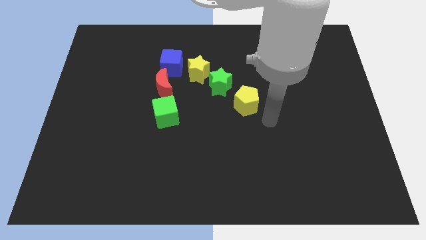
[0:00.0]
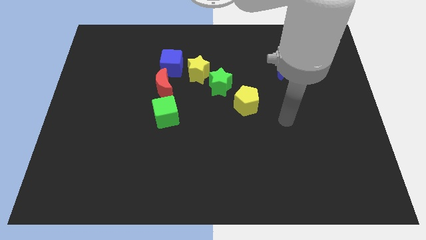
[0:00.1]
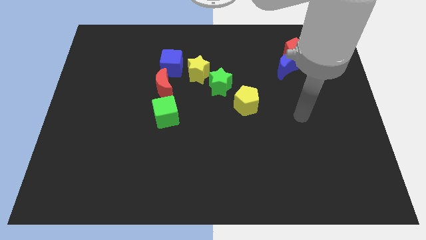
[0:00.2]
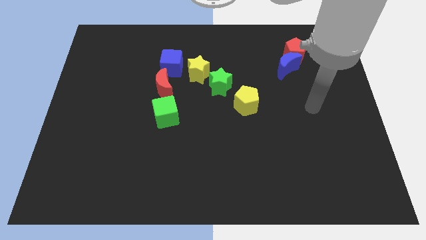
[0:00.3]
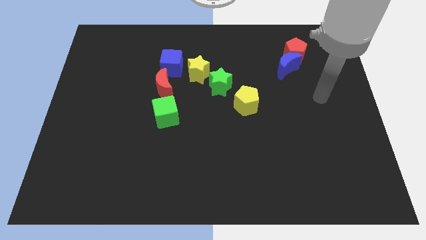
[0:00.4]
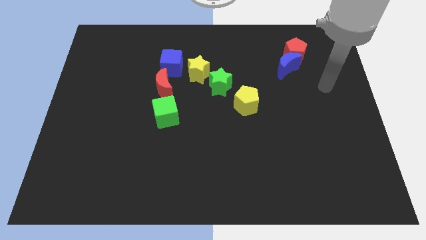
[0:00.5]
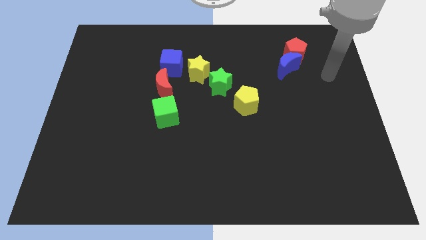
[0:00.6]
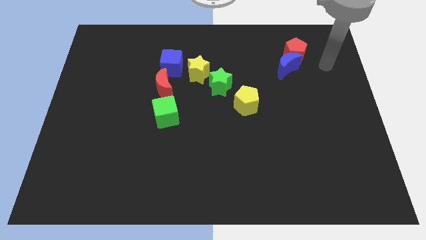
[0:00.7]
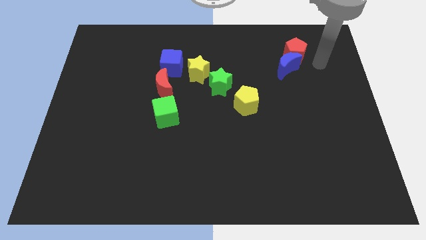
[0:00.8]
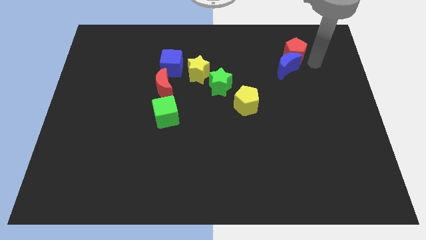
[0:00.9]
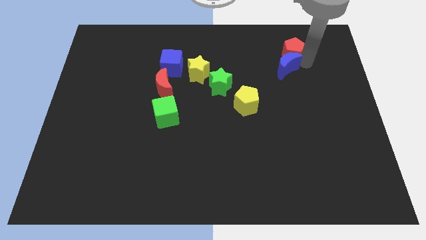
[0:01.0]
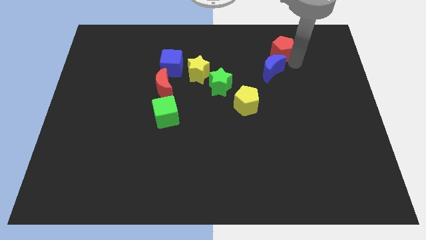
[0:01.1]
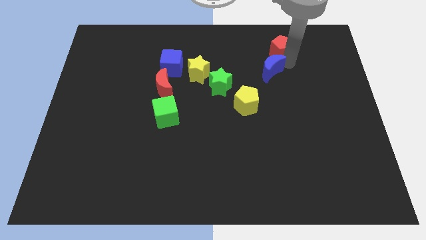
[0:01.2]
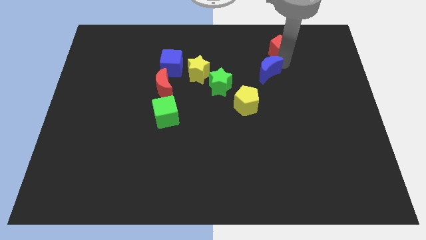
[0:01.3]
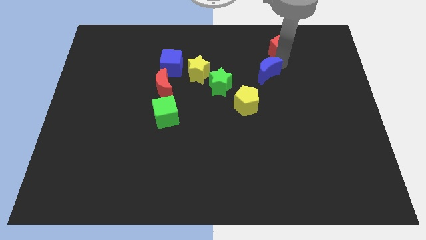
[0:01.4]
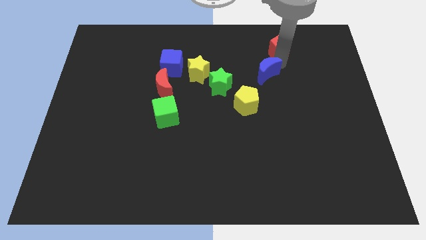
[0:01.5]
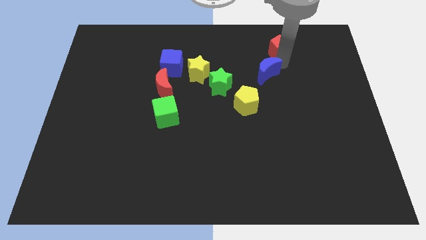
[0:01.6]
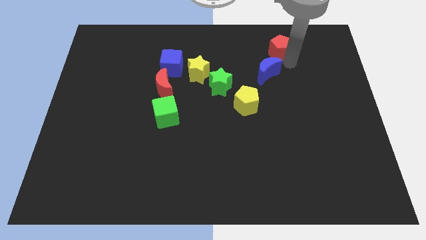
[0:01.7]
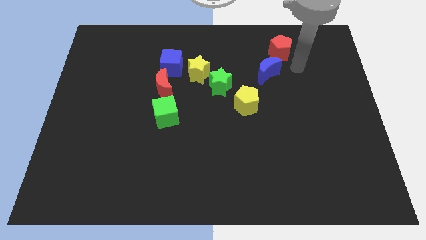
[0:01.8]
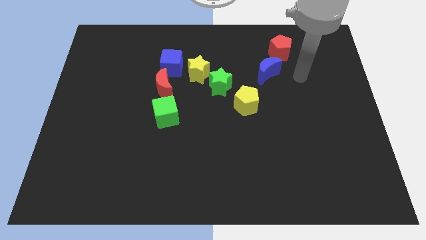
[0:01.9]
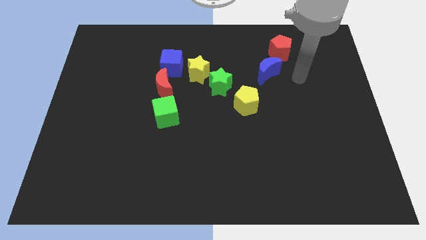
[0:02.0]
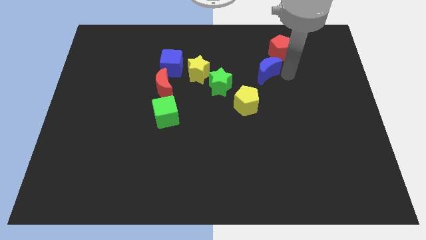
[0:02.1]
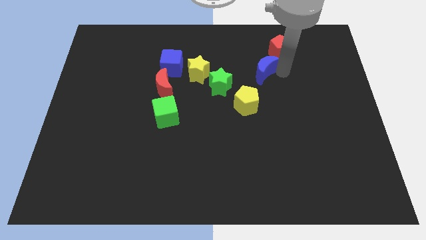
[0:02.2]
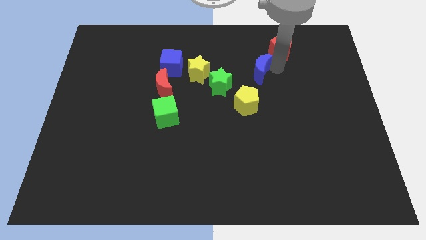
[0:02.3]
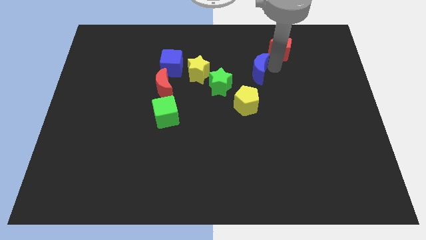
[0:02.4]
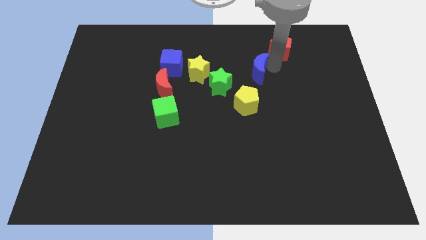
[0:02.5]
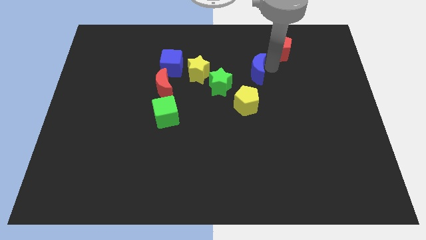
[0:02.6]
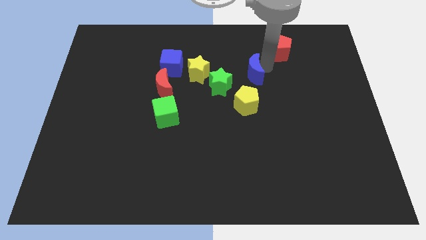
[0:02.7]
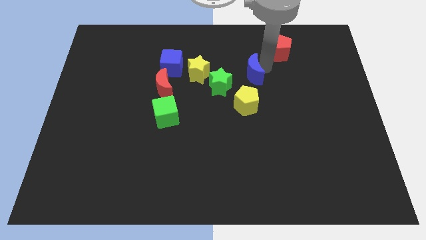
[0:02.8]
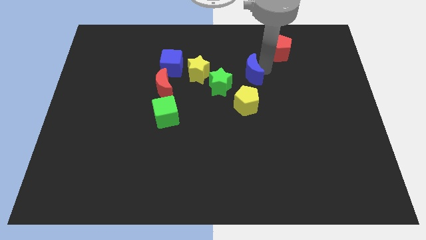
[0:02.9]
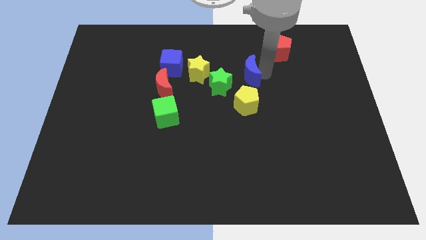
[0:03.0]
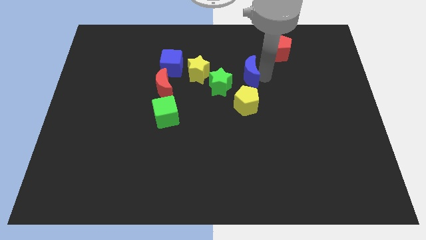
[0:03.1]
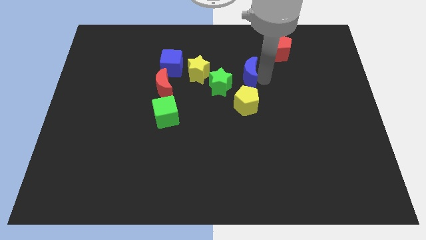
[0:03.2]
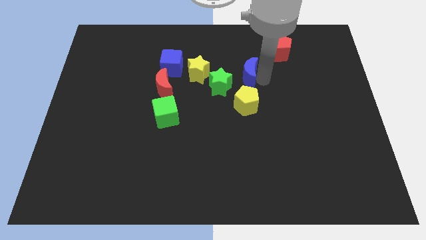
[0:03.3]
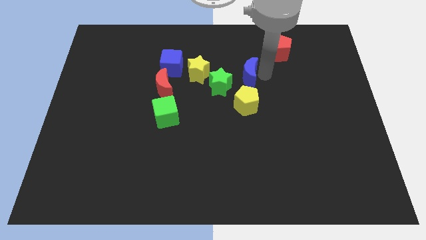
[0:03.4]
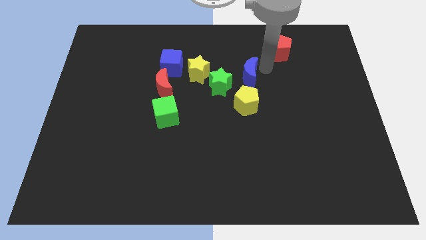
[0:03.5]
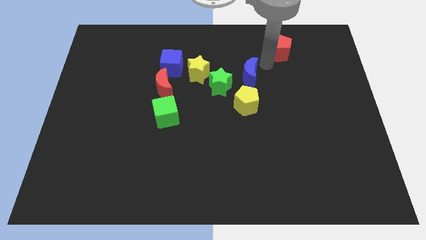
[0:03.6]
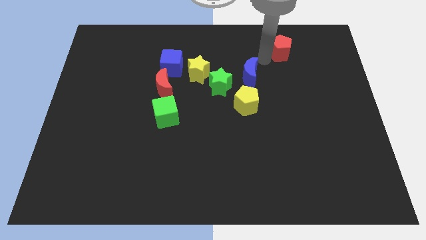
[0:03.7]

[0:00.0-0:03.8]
place the blue crescent above the yellow pentagon

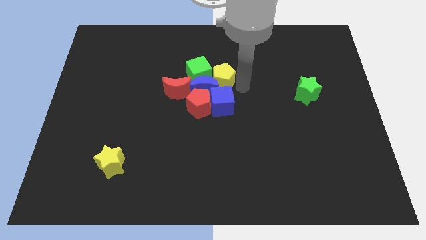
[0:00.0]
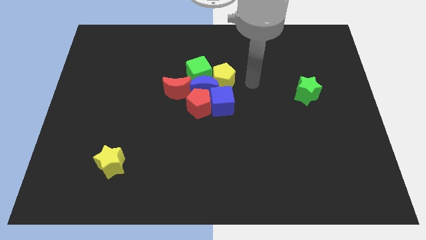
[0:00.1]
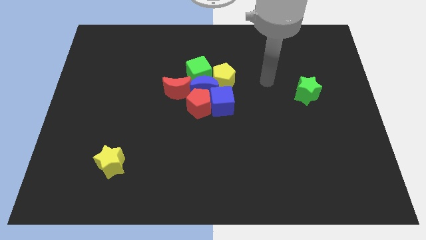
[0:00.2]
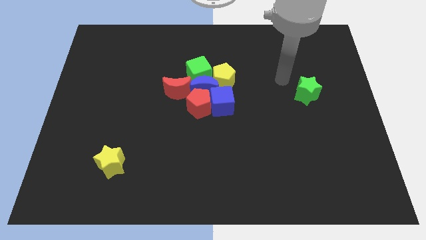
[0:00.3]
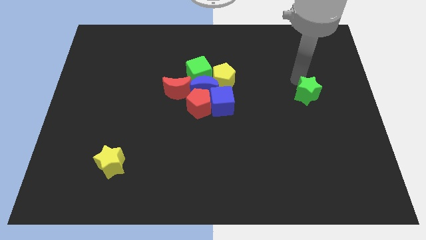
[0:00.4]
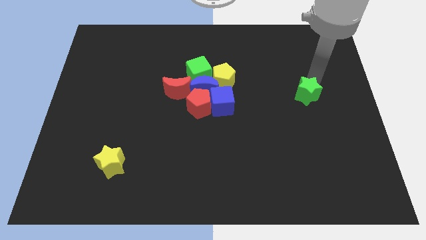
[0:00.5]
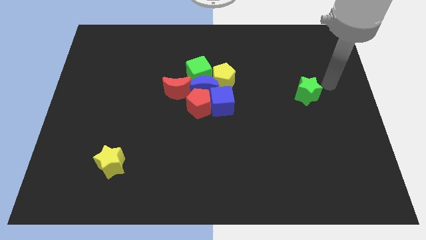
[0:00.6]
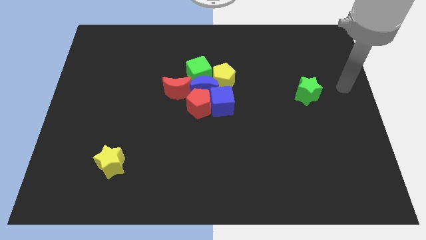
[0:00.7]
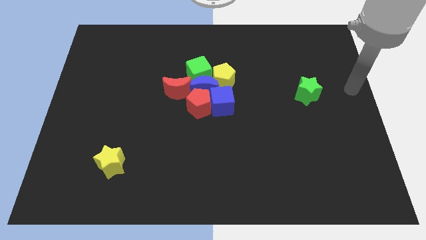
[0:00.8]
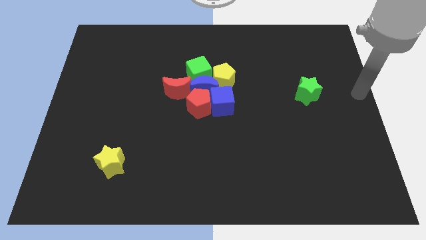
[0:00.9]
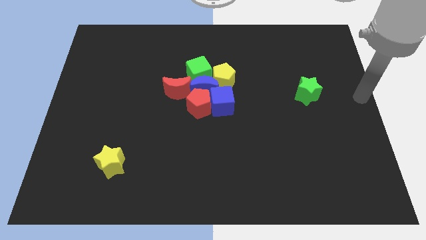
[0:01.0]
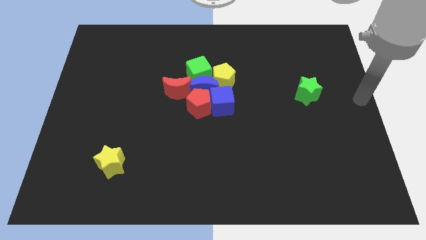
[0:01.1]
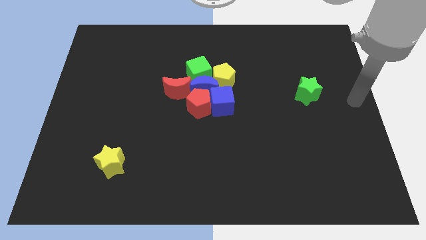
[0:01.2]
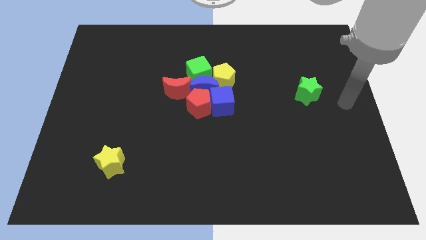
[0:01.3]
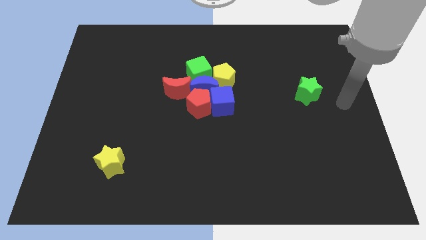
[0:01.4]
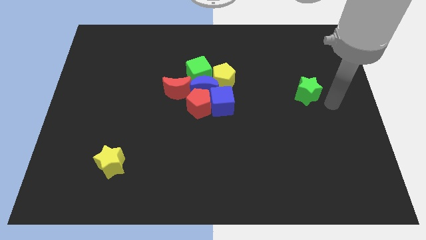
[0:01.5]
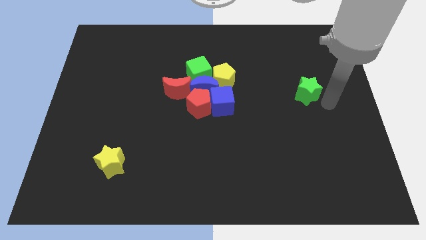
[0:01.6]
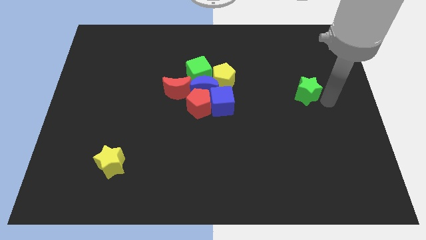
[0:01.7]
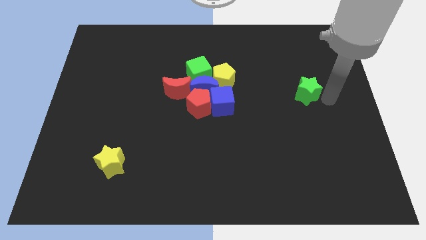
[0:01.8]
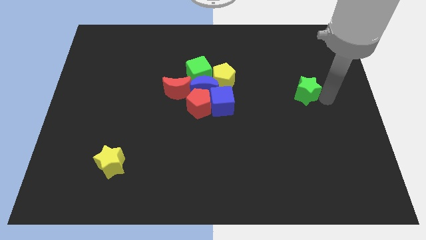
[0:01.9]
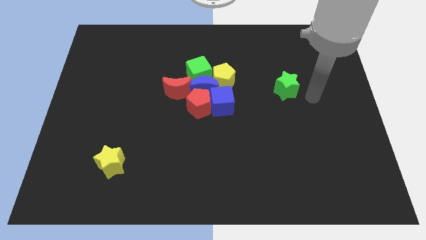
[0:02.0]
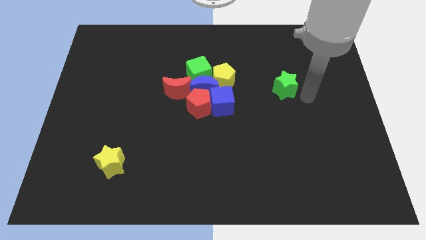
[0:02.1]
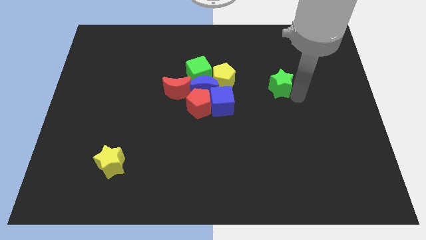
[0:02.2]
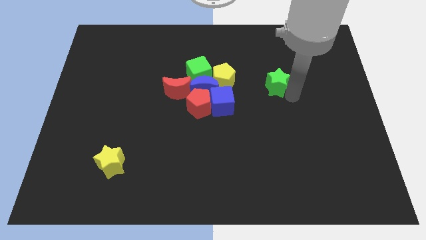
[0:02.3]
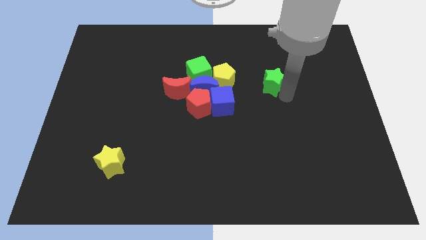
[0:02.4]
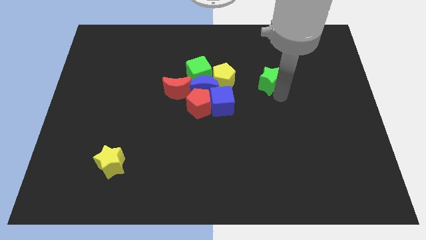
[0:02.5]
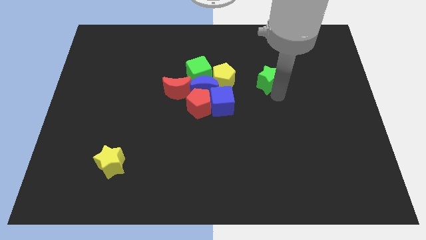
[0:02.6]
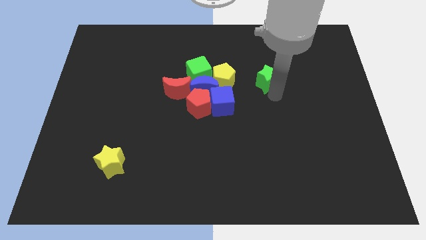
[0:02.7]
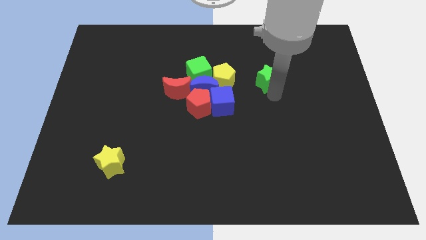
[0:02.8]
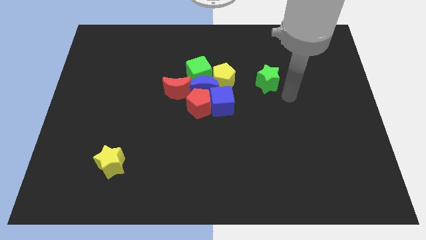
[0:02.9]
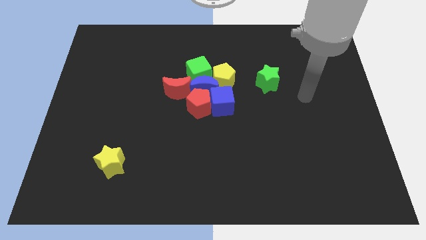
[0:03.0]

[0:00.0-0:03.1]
slide the green star slightly to the left

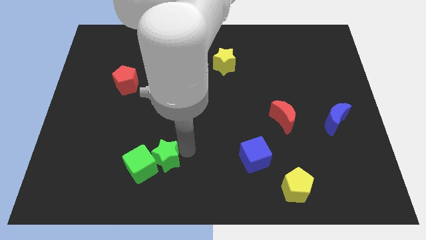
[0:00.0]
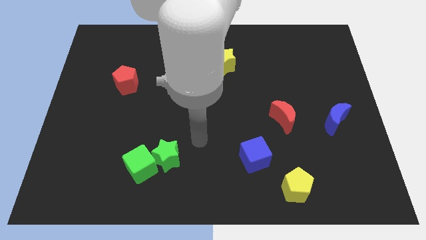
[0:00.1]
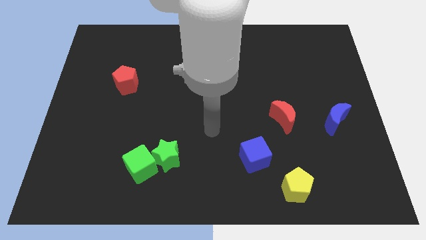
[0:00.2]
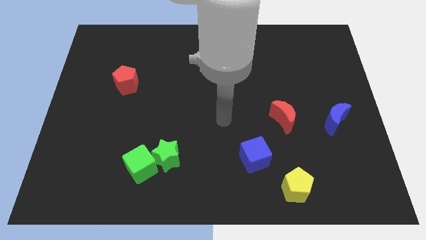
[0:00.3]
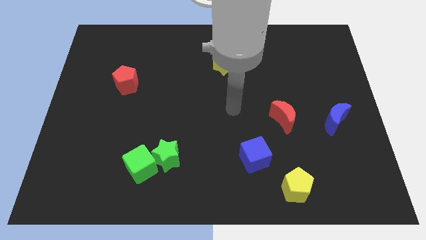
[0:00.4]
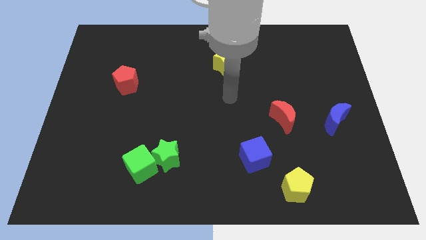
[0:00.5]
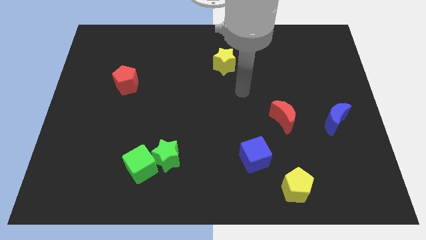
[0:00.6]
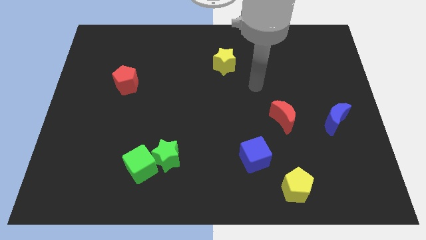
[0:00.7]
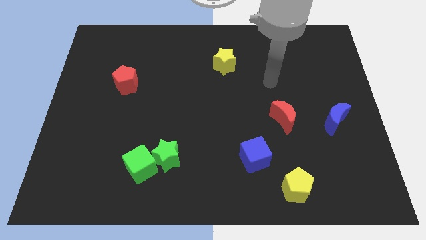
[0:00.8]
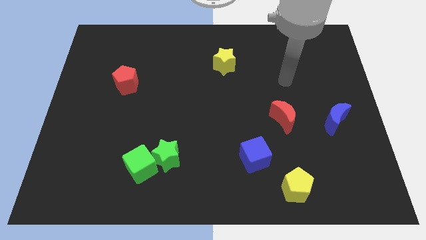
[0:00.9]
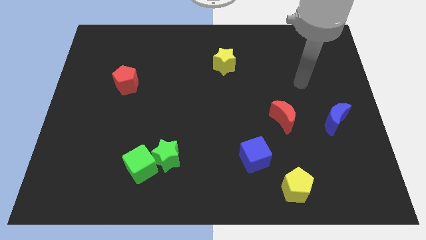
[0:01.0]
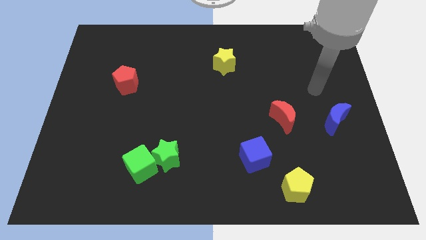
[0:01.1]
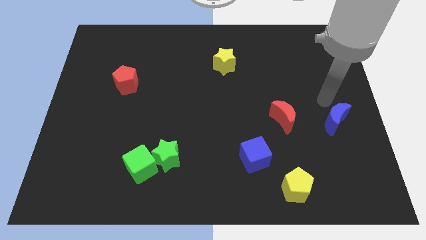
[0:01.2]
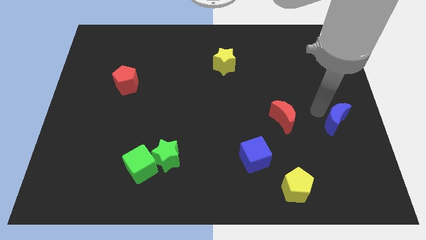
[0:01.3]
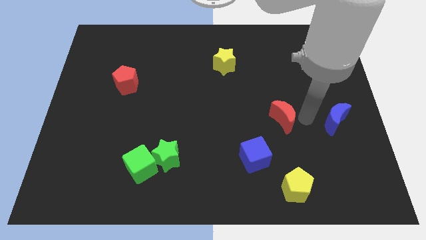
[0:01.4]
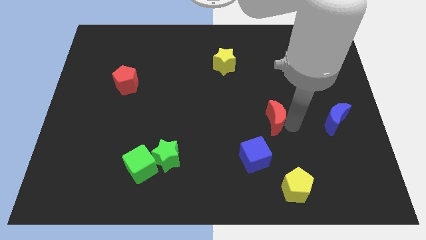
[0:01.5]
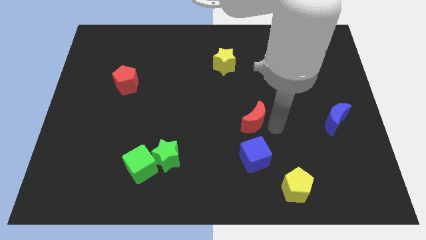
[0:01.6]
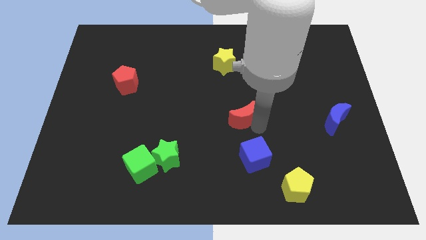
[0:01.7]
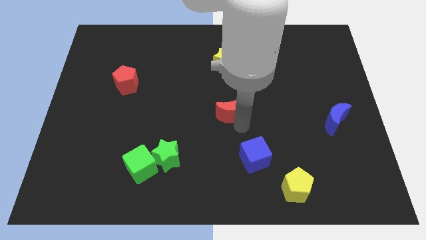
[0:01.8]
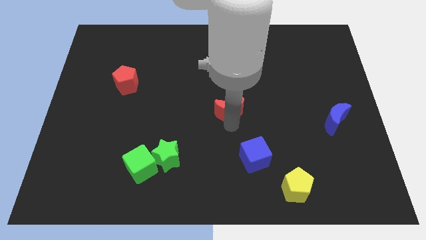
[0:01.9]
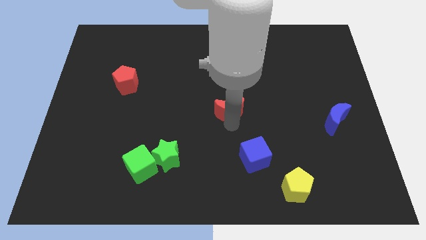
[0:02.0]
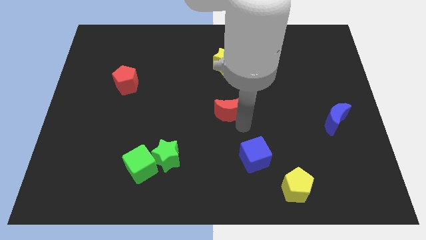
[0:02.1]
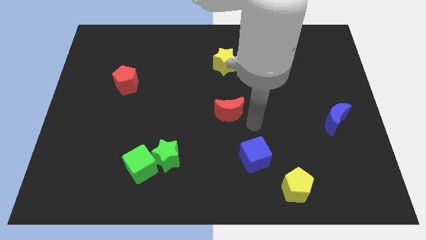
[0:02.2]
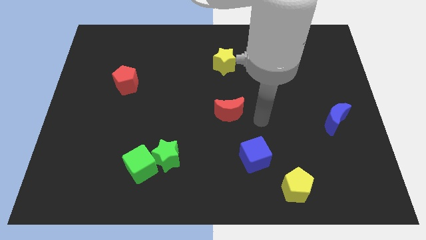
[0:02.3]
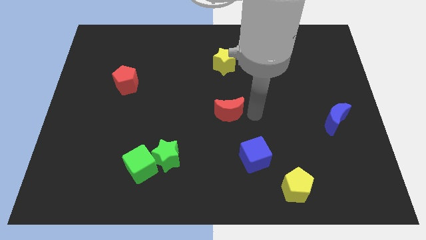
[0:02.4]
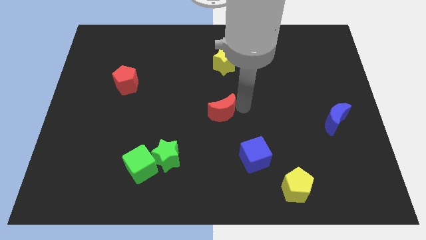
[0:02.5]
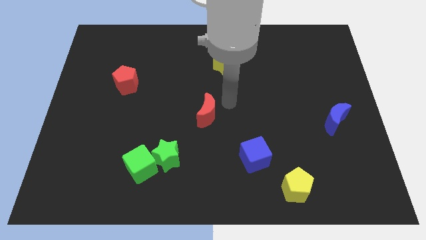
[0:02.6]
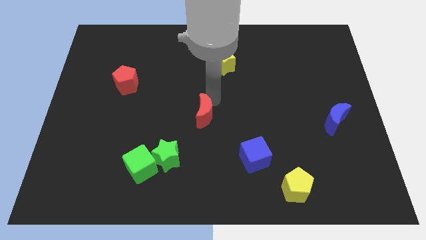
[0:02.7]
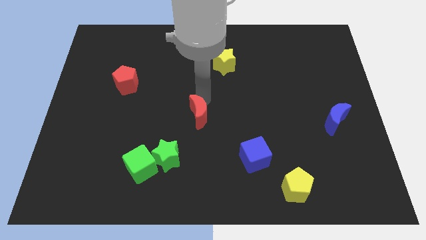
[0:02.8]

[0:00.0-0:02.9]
place red moon to the center of the board
